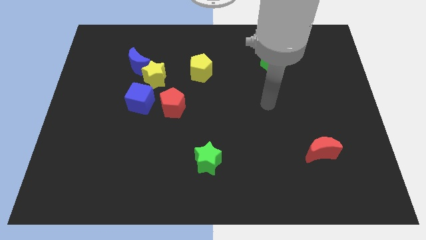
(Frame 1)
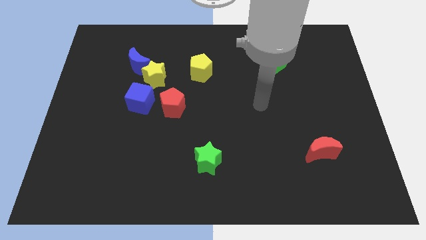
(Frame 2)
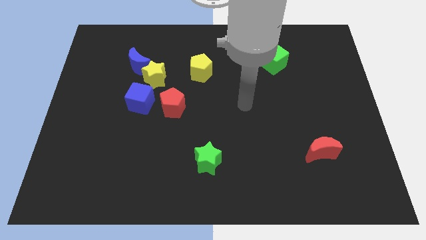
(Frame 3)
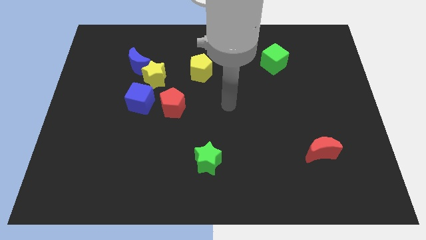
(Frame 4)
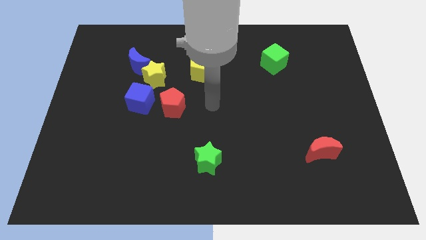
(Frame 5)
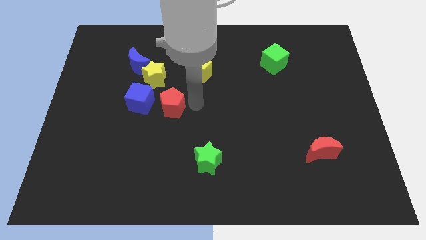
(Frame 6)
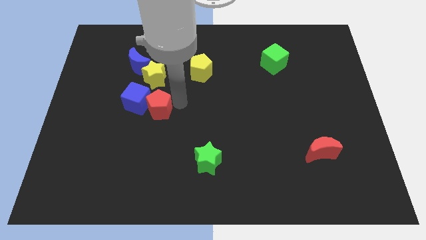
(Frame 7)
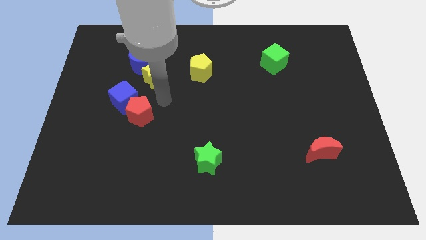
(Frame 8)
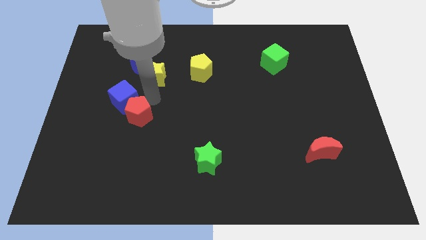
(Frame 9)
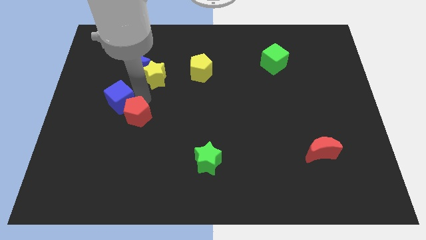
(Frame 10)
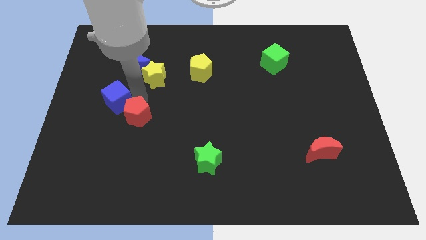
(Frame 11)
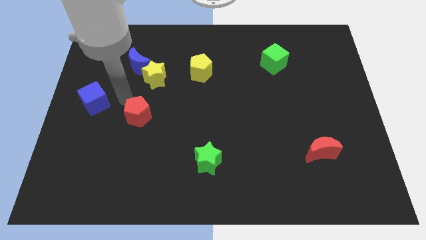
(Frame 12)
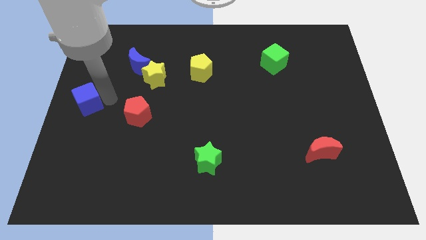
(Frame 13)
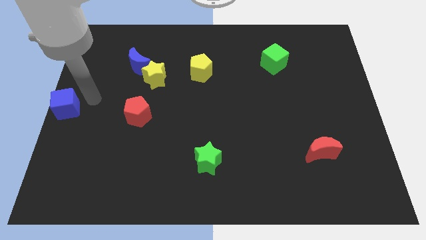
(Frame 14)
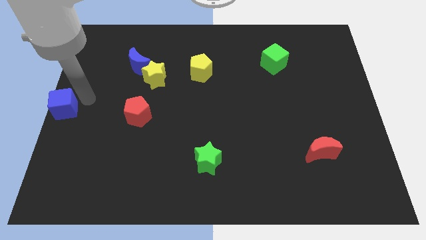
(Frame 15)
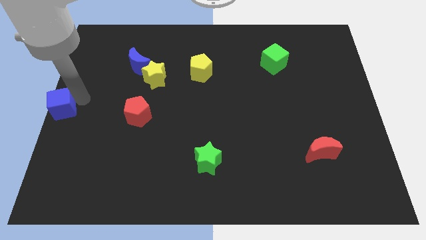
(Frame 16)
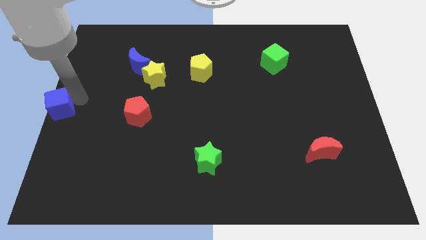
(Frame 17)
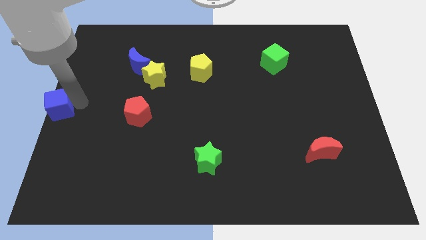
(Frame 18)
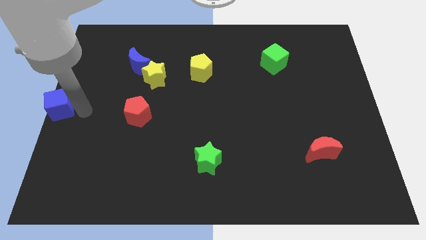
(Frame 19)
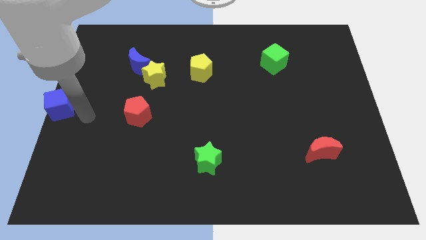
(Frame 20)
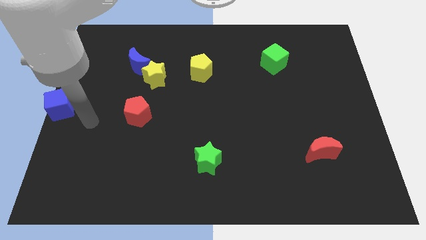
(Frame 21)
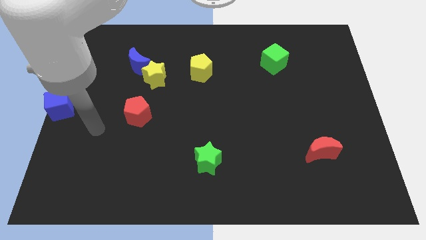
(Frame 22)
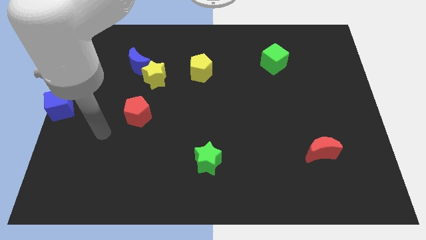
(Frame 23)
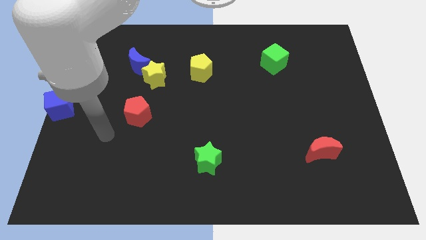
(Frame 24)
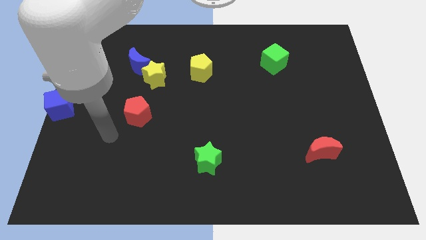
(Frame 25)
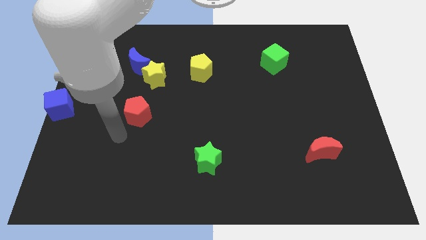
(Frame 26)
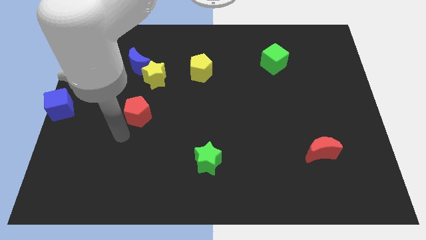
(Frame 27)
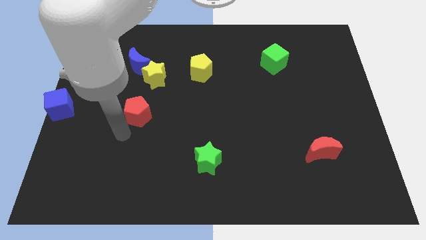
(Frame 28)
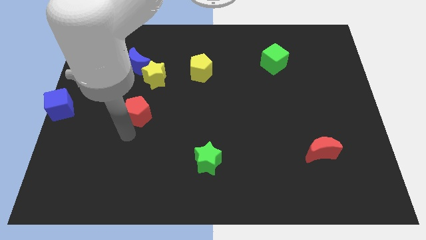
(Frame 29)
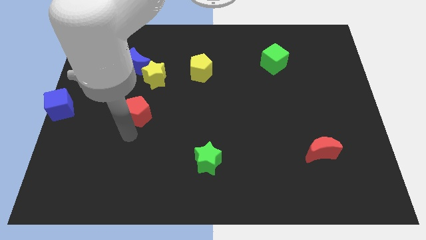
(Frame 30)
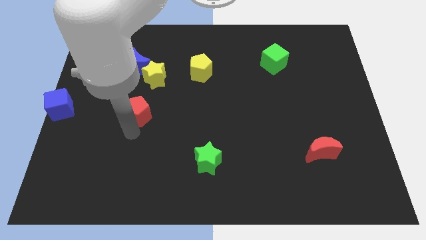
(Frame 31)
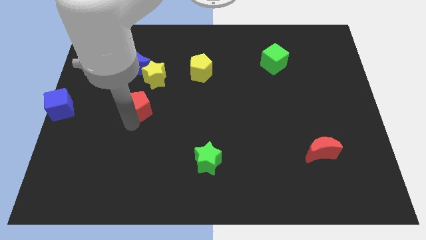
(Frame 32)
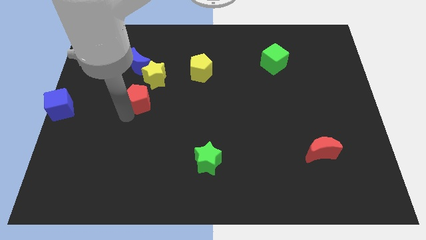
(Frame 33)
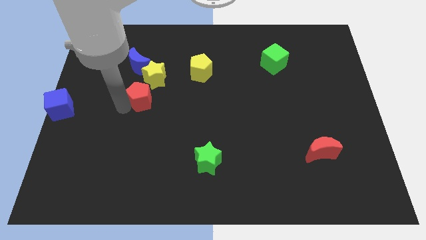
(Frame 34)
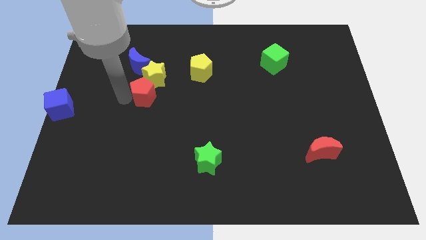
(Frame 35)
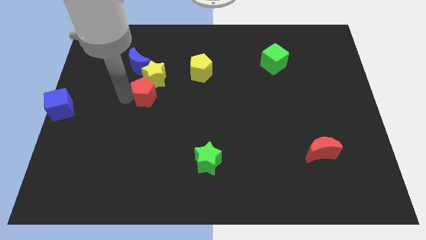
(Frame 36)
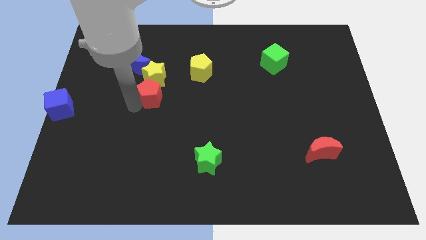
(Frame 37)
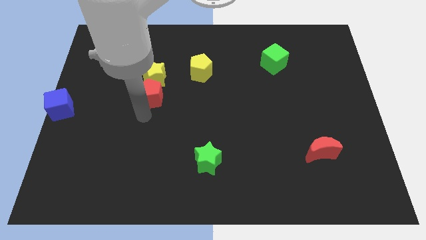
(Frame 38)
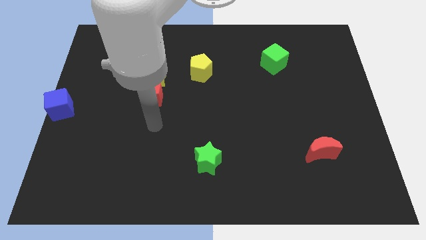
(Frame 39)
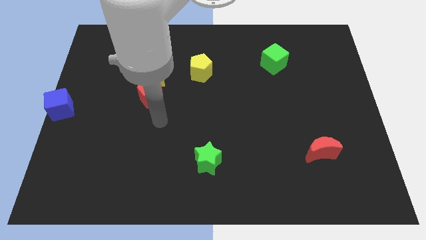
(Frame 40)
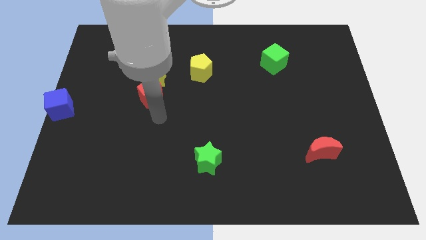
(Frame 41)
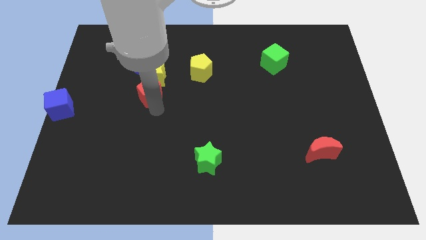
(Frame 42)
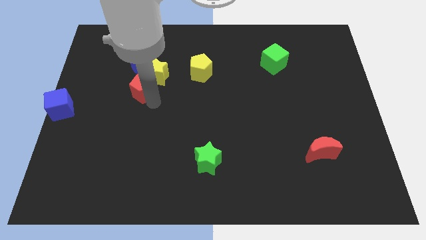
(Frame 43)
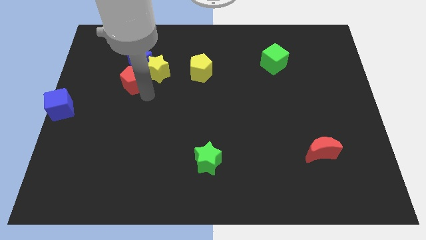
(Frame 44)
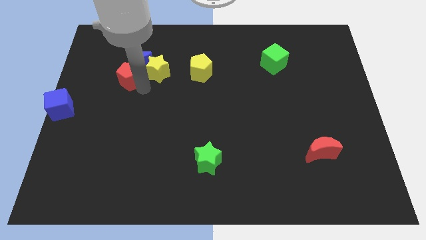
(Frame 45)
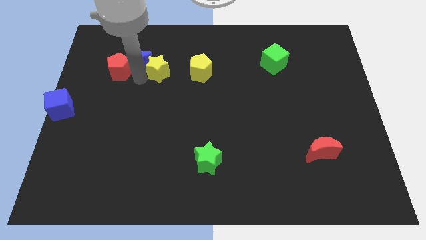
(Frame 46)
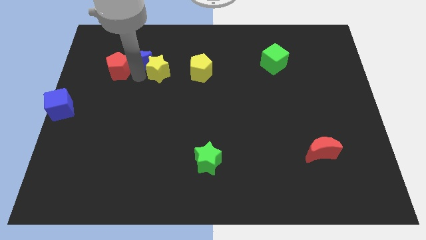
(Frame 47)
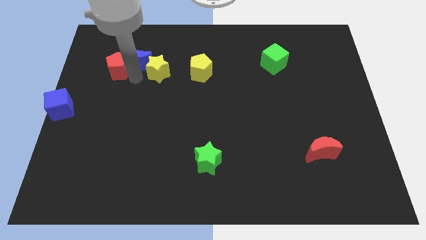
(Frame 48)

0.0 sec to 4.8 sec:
push the red crescent into the blue cube

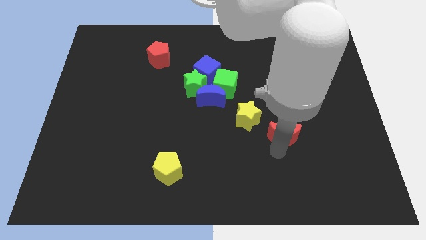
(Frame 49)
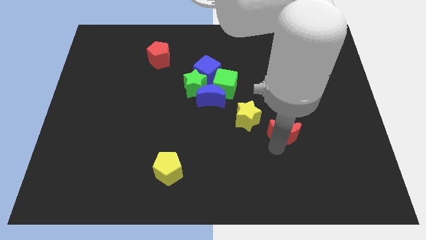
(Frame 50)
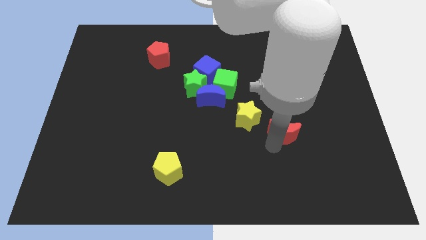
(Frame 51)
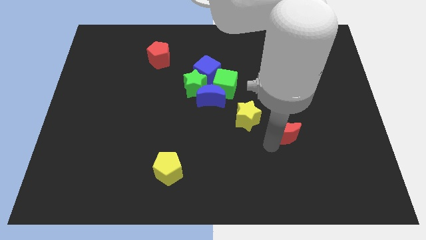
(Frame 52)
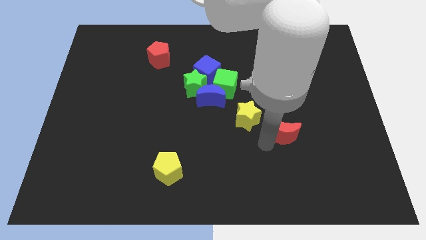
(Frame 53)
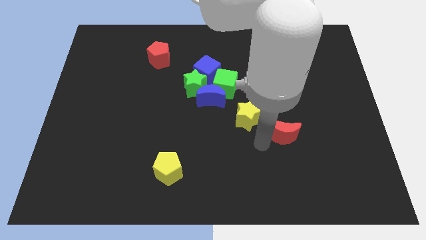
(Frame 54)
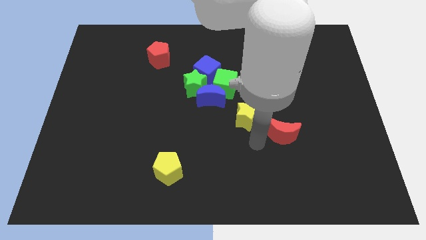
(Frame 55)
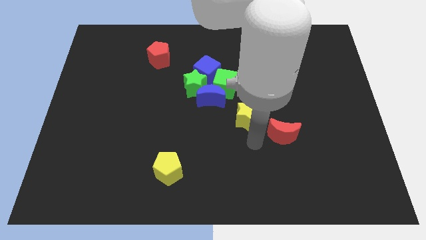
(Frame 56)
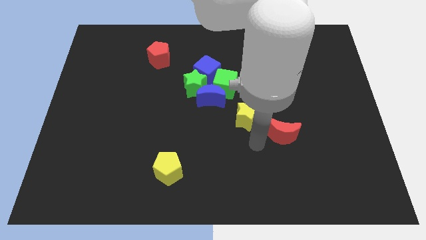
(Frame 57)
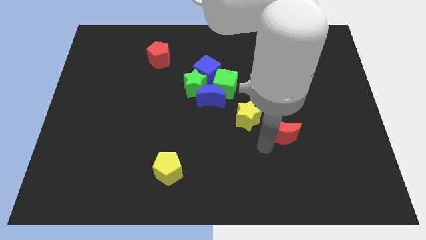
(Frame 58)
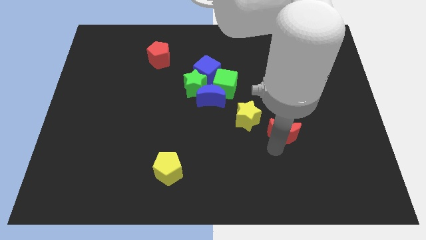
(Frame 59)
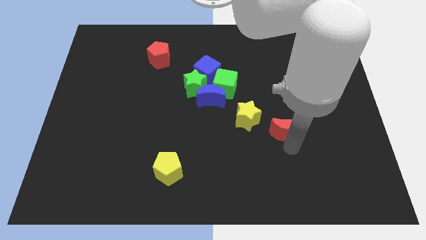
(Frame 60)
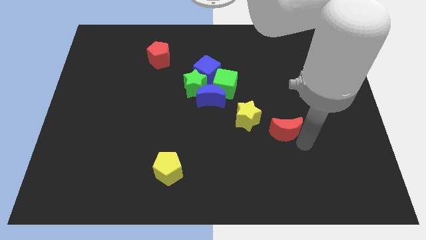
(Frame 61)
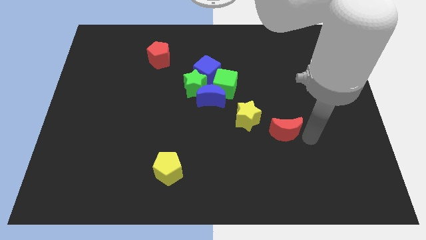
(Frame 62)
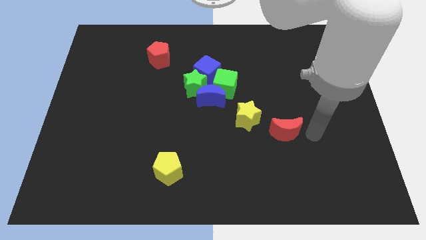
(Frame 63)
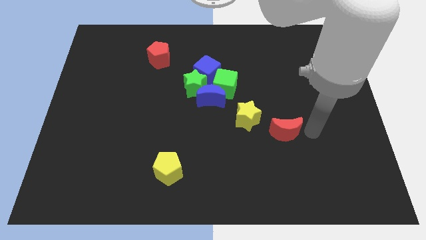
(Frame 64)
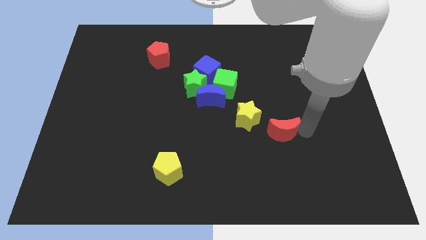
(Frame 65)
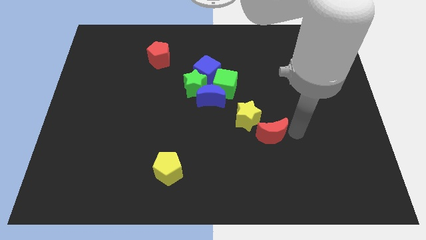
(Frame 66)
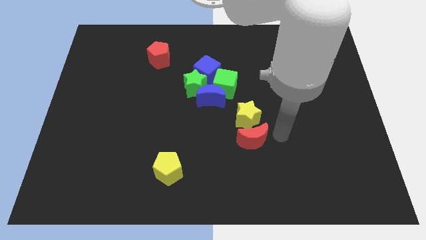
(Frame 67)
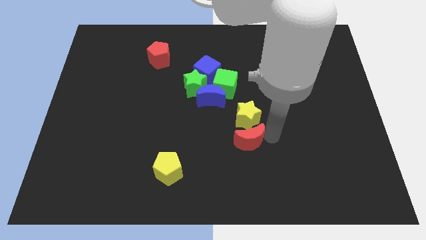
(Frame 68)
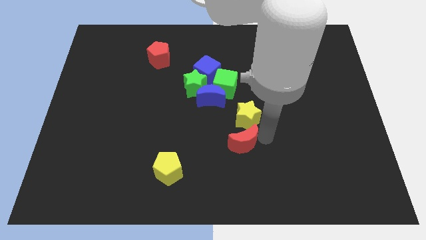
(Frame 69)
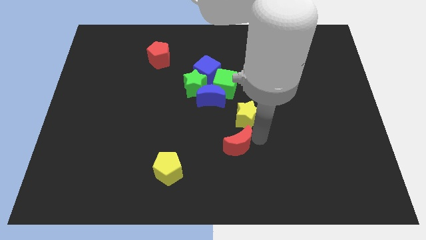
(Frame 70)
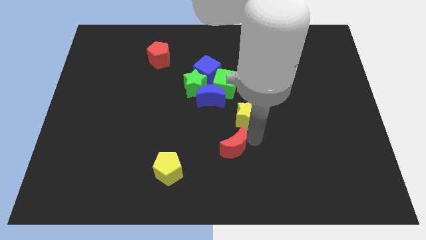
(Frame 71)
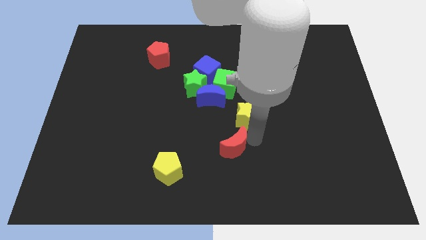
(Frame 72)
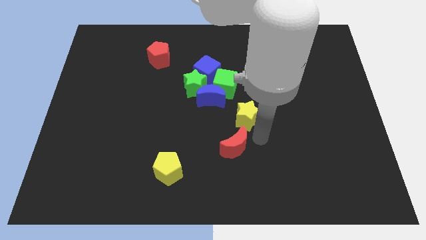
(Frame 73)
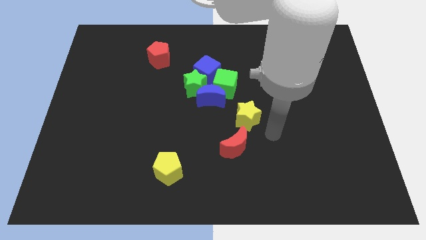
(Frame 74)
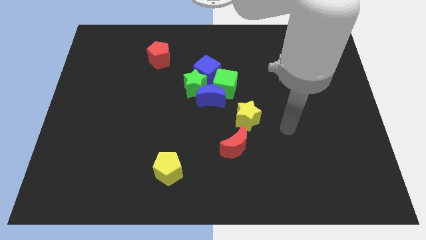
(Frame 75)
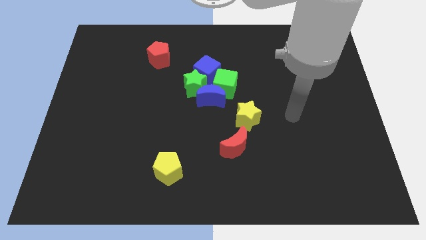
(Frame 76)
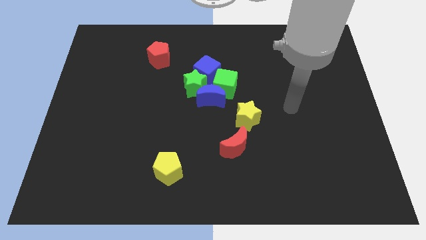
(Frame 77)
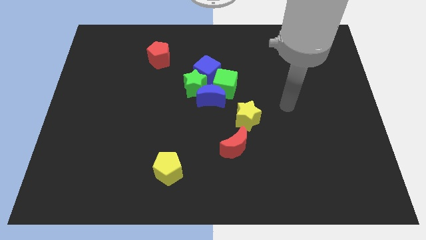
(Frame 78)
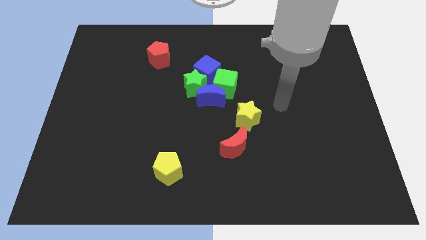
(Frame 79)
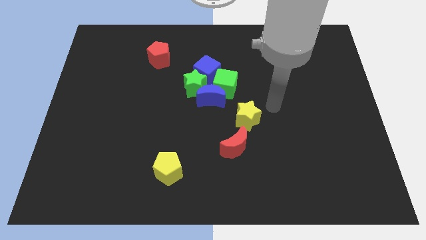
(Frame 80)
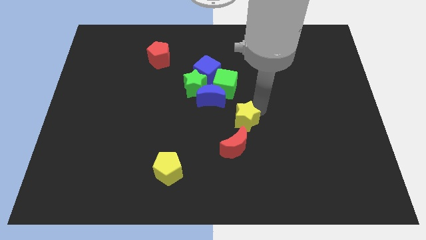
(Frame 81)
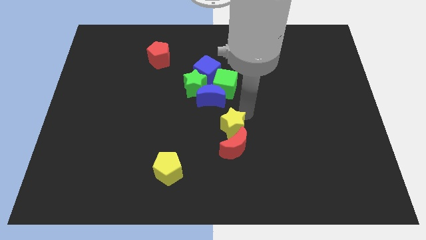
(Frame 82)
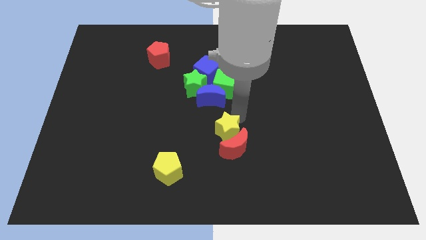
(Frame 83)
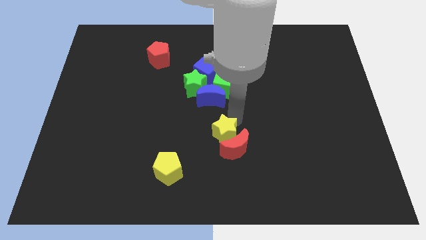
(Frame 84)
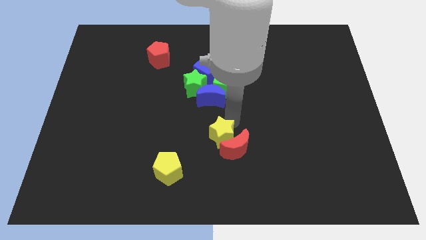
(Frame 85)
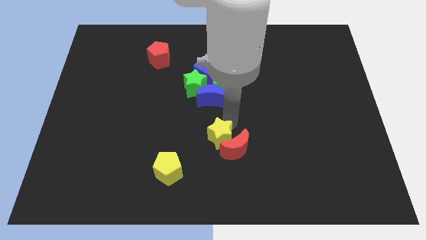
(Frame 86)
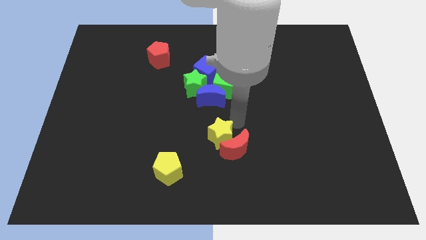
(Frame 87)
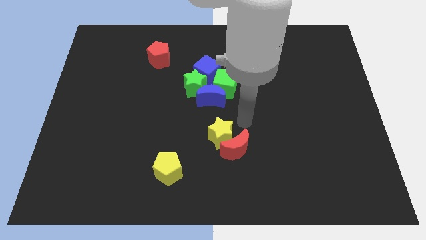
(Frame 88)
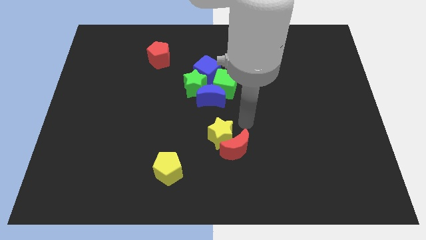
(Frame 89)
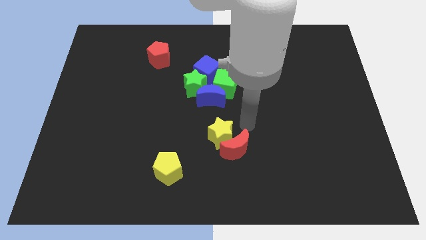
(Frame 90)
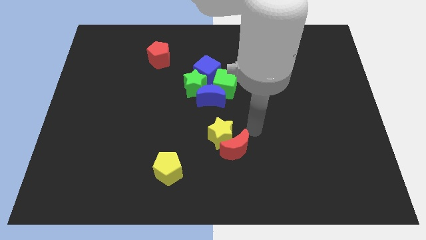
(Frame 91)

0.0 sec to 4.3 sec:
push the yellow star into the red crescent
